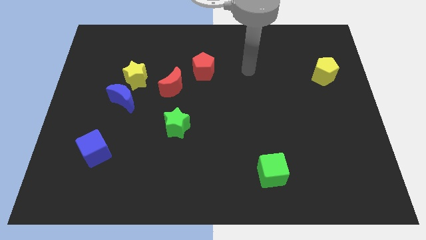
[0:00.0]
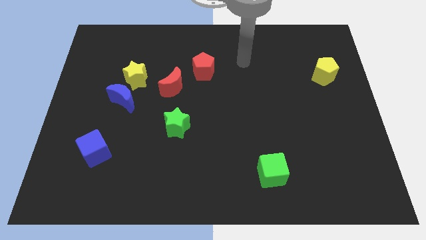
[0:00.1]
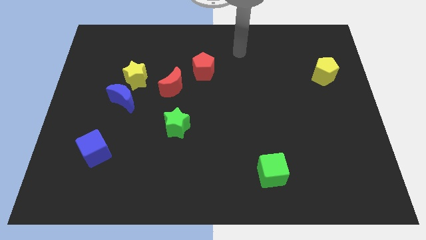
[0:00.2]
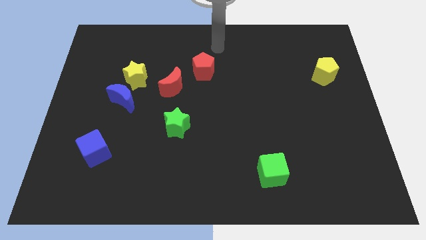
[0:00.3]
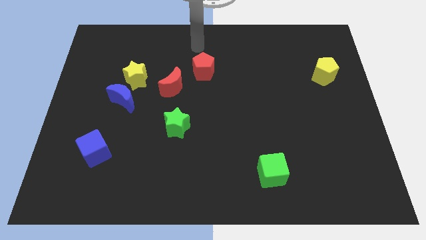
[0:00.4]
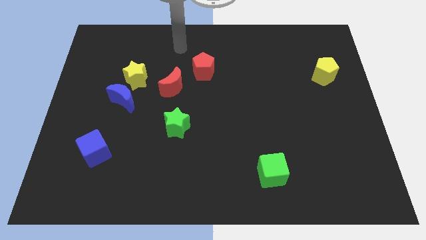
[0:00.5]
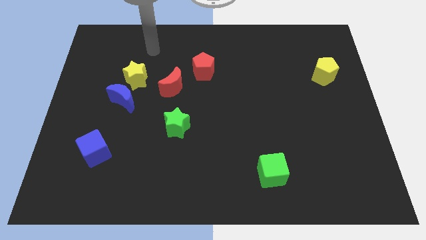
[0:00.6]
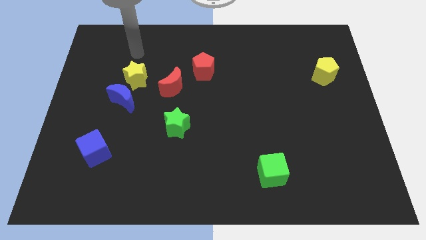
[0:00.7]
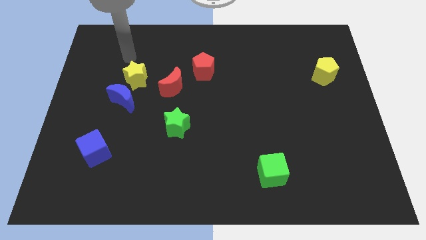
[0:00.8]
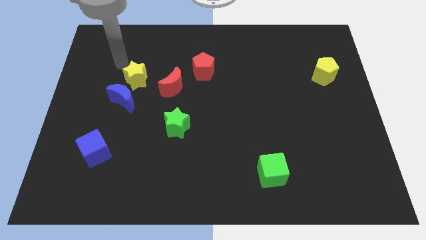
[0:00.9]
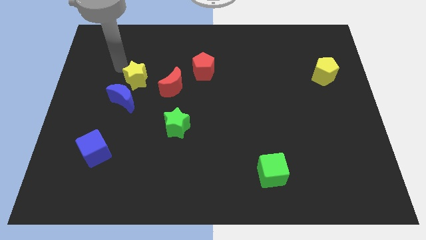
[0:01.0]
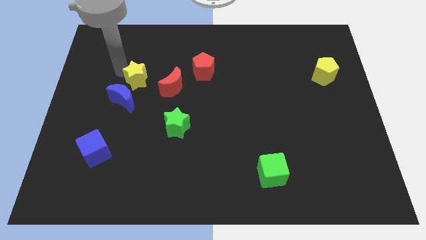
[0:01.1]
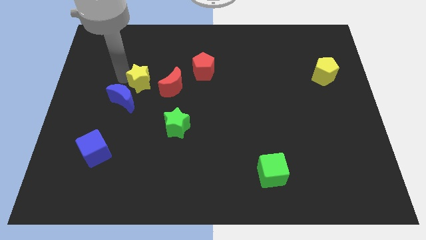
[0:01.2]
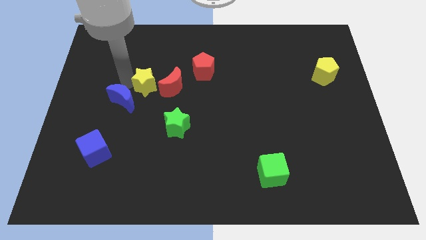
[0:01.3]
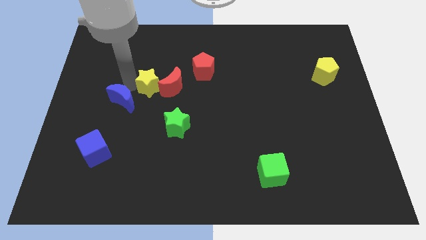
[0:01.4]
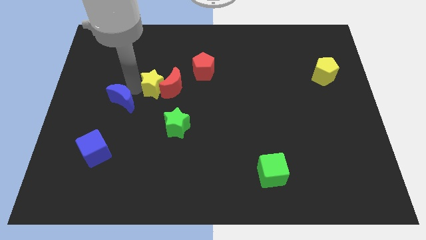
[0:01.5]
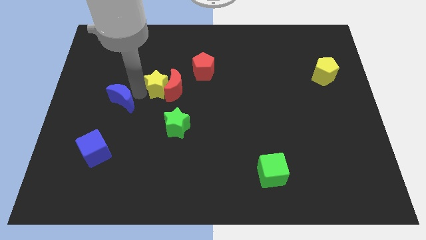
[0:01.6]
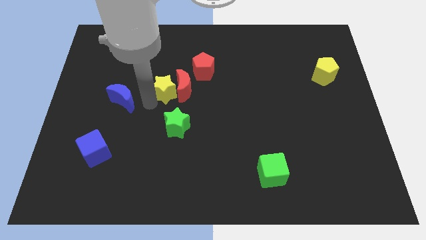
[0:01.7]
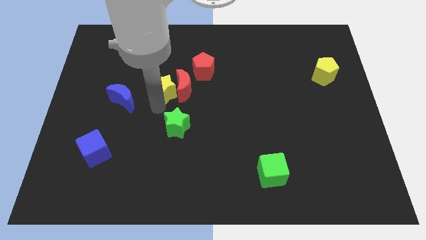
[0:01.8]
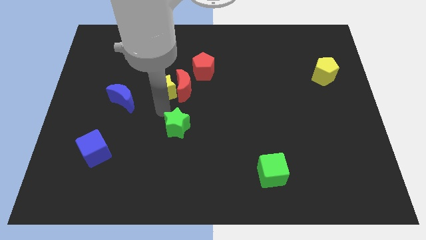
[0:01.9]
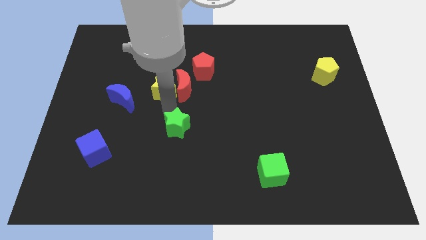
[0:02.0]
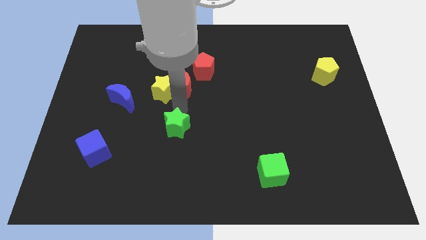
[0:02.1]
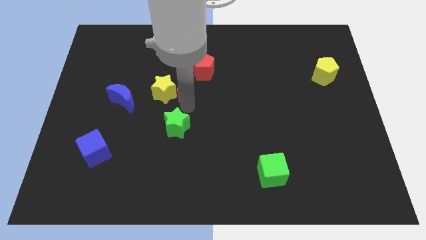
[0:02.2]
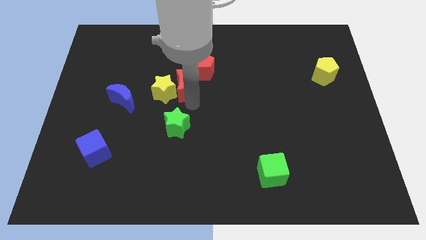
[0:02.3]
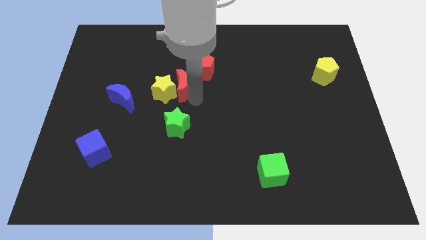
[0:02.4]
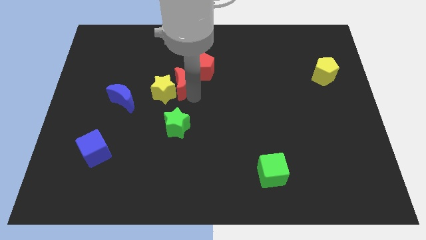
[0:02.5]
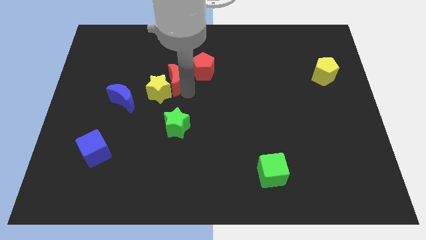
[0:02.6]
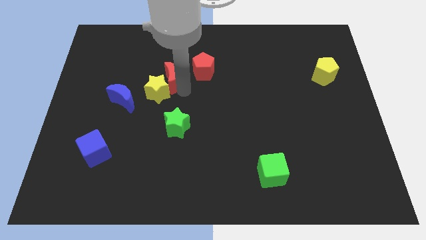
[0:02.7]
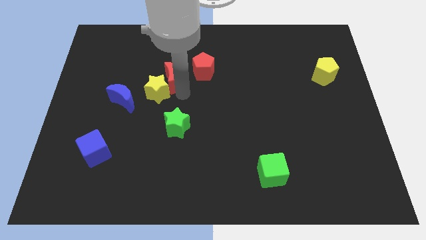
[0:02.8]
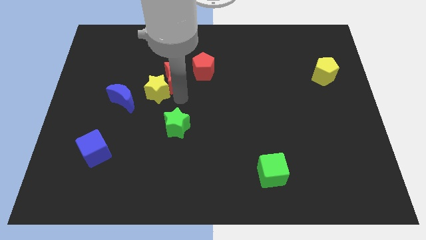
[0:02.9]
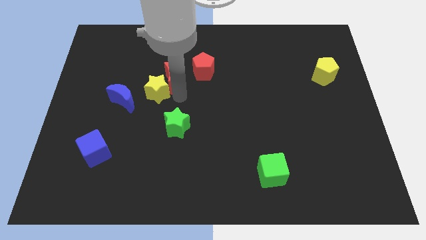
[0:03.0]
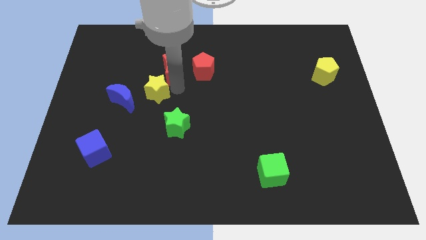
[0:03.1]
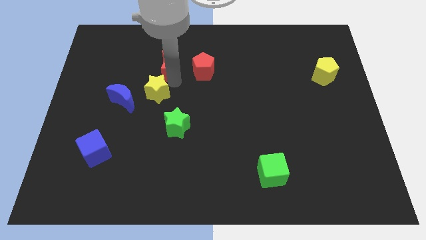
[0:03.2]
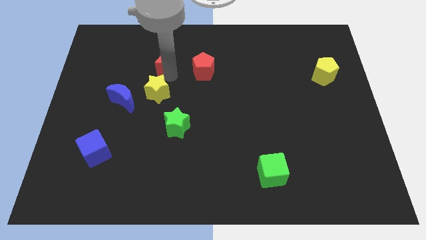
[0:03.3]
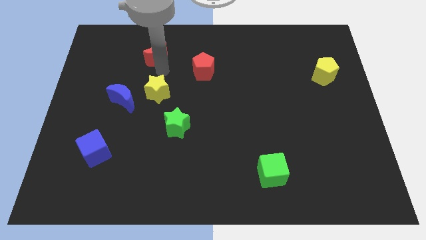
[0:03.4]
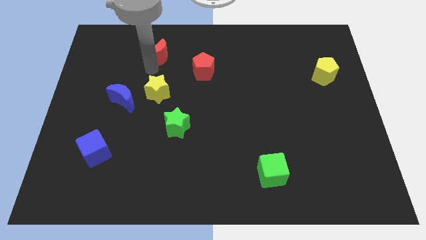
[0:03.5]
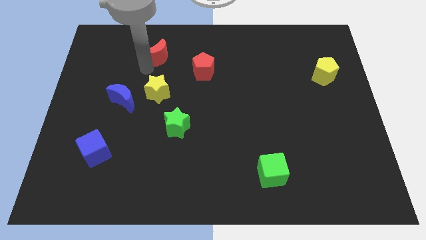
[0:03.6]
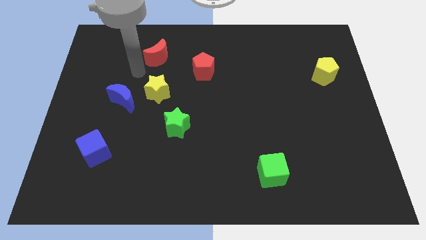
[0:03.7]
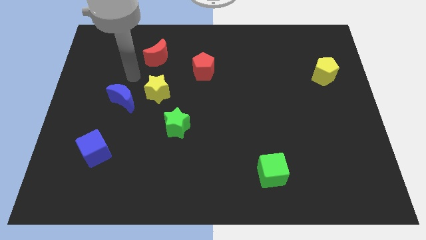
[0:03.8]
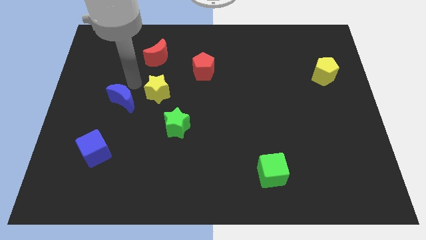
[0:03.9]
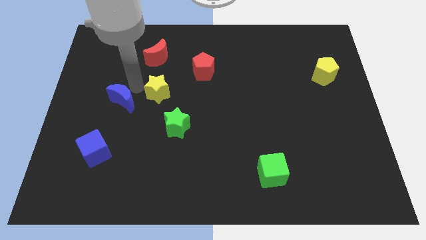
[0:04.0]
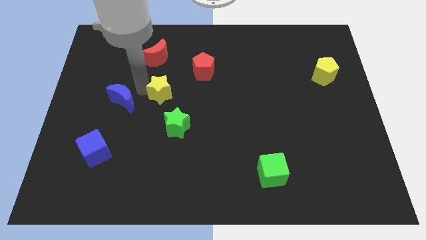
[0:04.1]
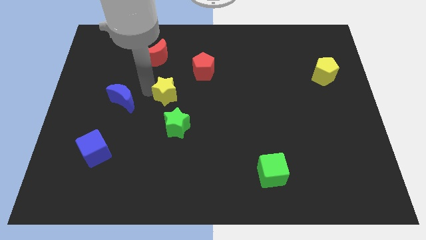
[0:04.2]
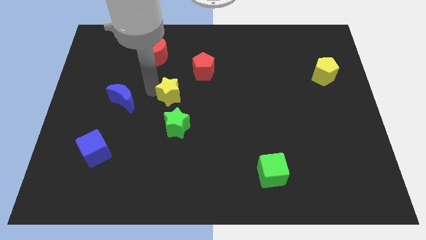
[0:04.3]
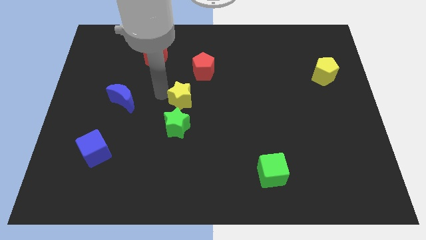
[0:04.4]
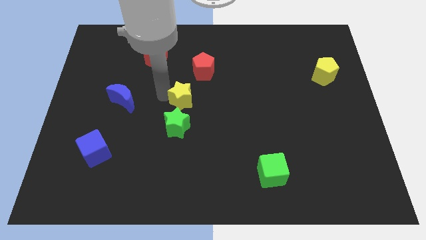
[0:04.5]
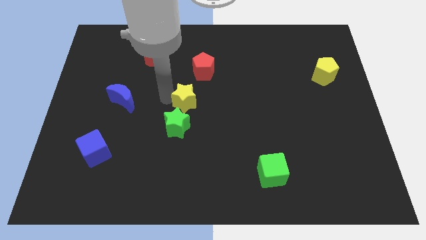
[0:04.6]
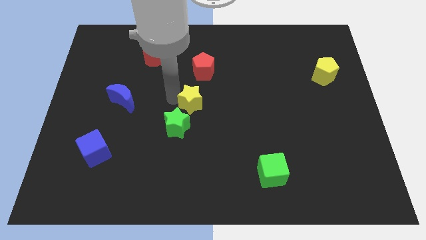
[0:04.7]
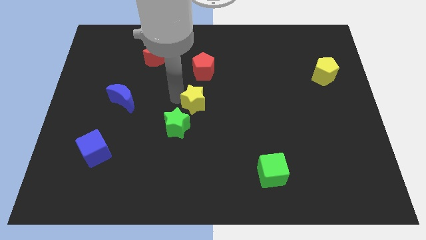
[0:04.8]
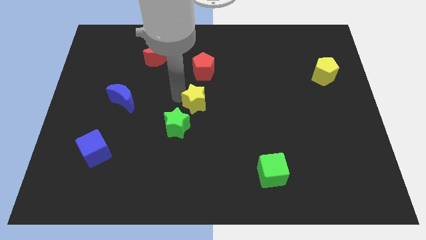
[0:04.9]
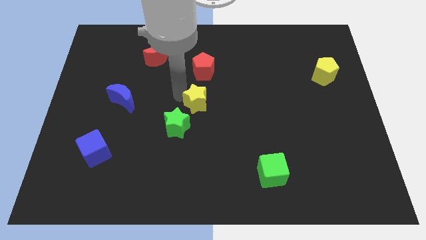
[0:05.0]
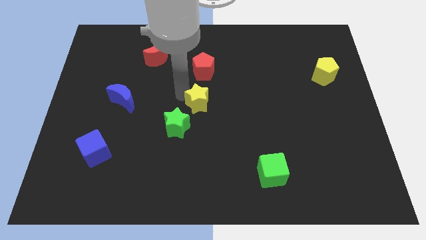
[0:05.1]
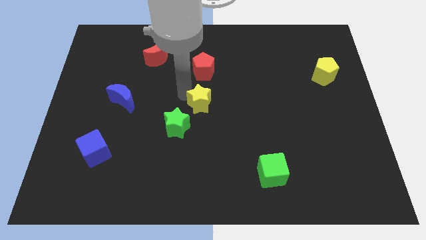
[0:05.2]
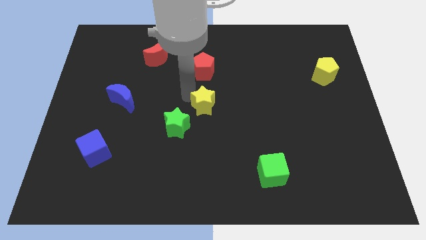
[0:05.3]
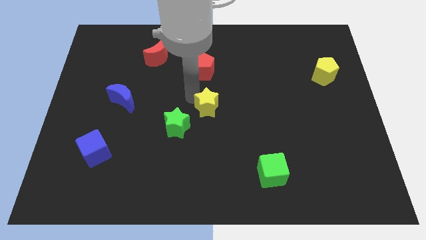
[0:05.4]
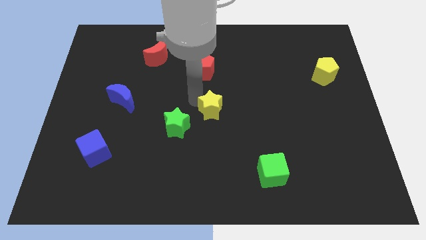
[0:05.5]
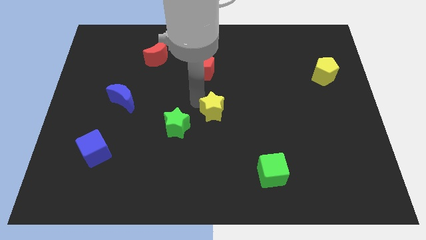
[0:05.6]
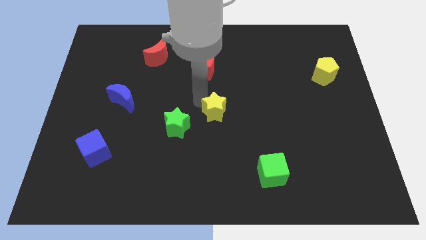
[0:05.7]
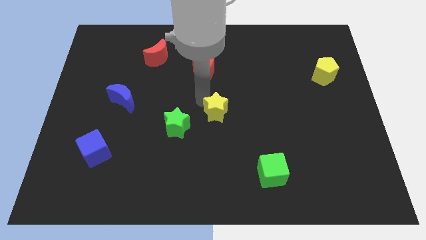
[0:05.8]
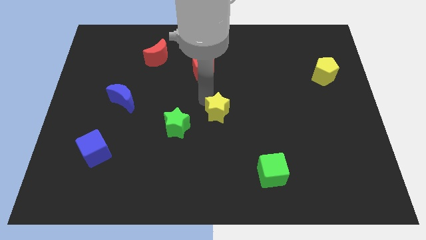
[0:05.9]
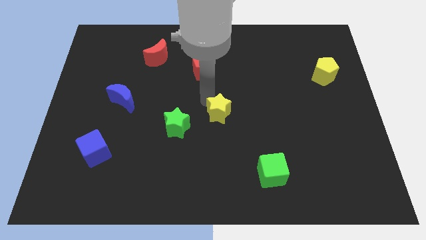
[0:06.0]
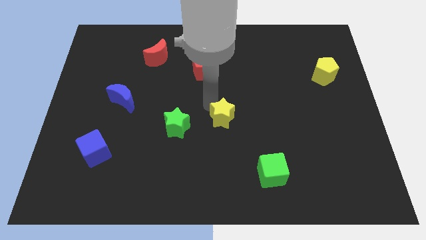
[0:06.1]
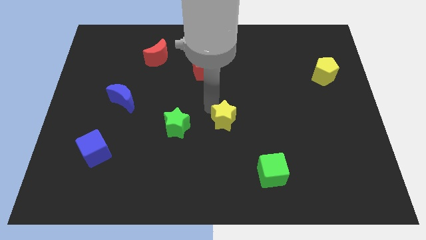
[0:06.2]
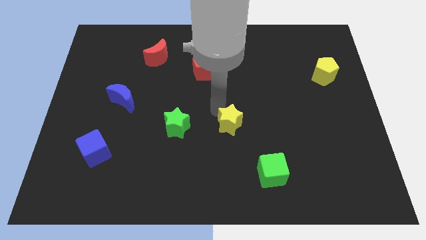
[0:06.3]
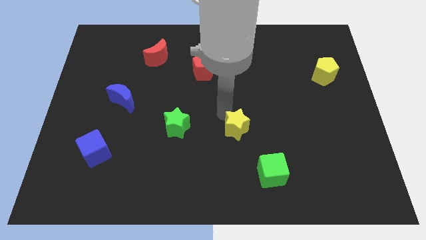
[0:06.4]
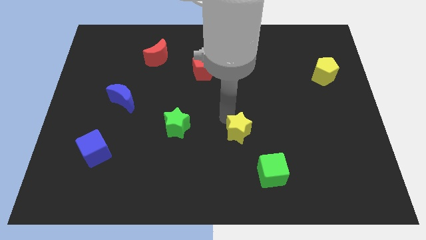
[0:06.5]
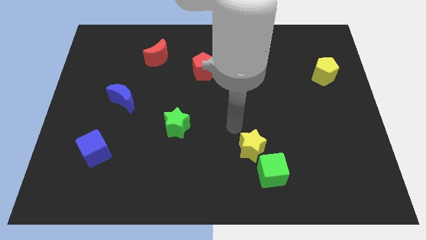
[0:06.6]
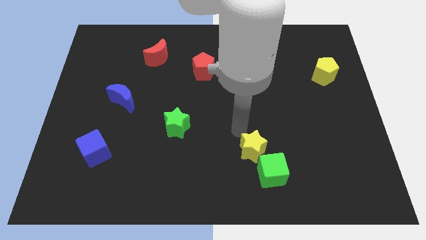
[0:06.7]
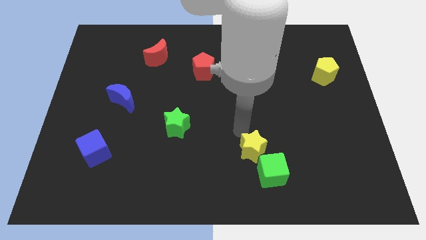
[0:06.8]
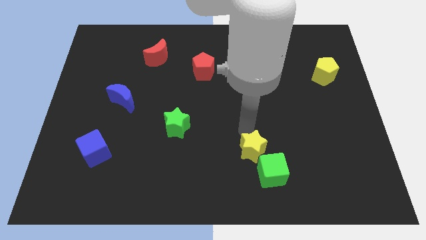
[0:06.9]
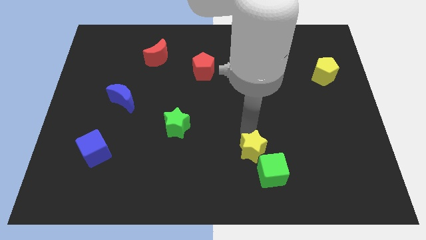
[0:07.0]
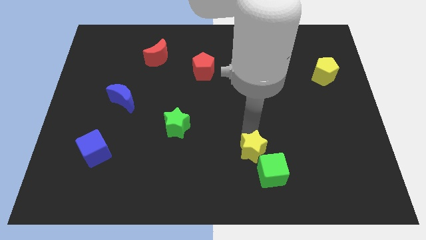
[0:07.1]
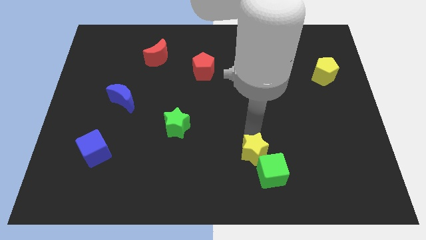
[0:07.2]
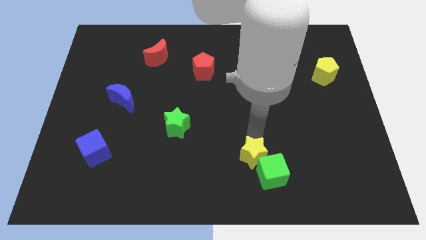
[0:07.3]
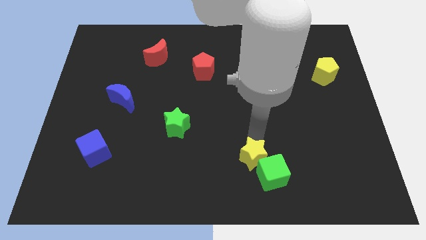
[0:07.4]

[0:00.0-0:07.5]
move the yellow star next to the green cube

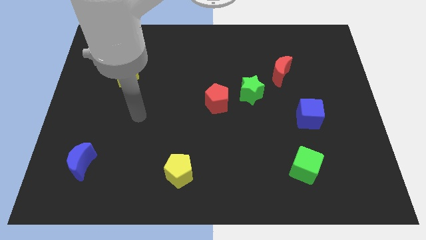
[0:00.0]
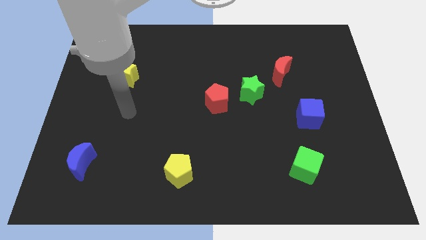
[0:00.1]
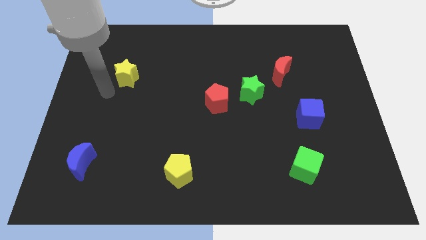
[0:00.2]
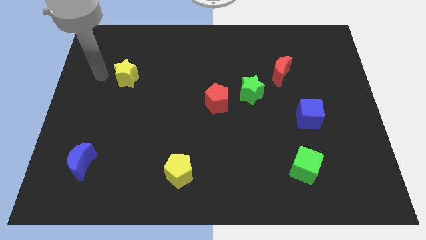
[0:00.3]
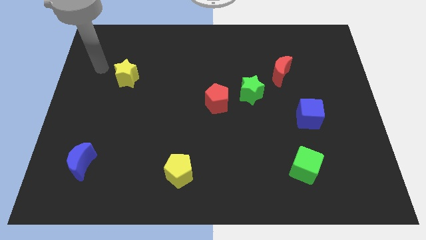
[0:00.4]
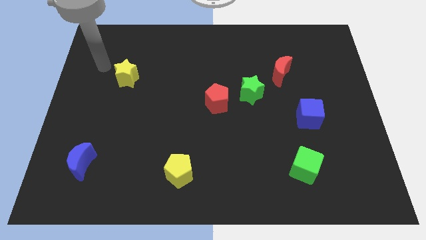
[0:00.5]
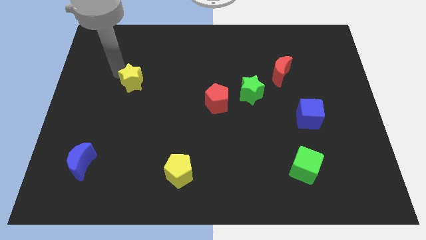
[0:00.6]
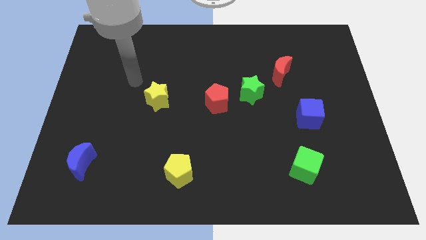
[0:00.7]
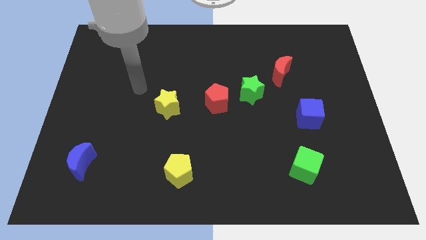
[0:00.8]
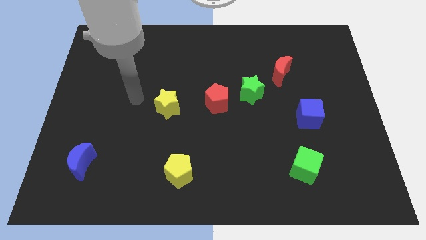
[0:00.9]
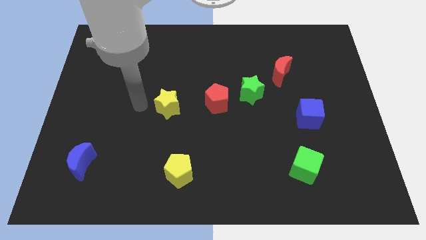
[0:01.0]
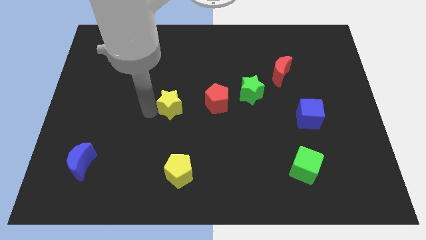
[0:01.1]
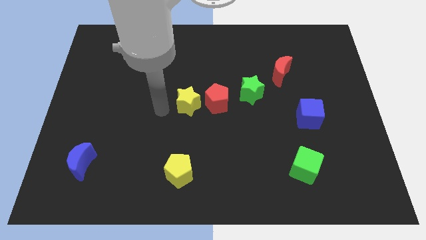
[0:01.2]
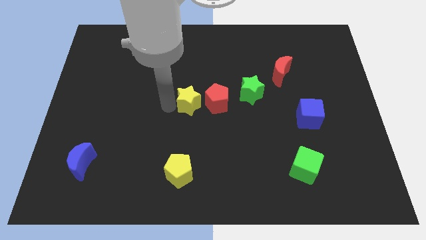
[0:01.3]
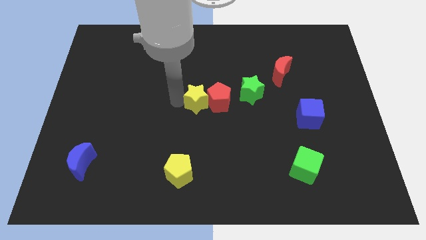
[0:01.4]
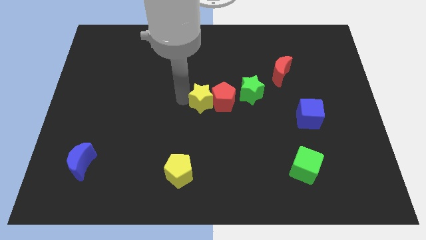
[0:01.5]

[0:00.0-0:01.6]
put the yellow star next to the red pentagon
